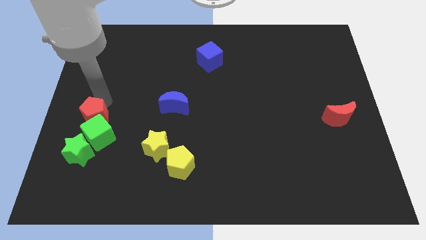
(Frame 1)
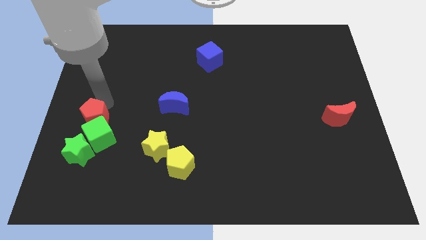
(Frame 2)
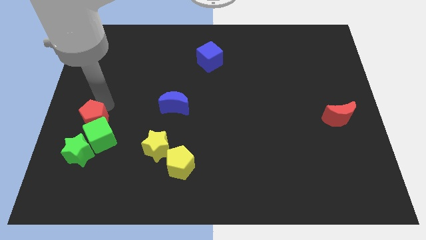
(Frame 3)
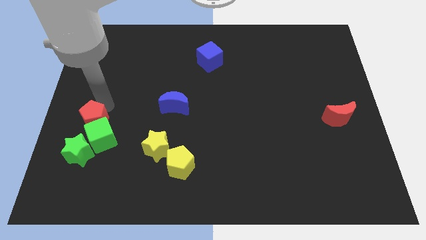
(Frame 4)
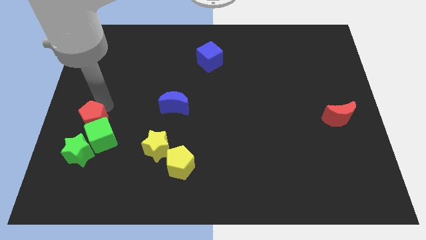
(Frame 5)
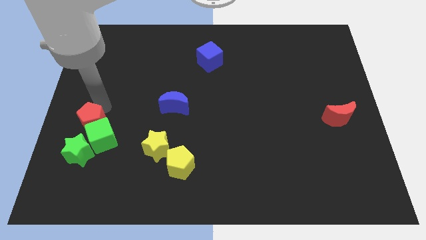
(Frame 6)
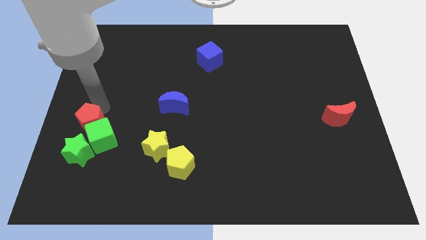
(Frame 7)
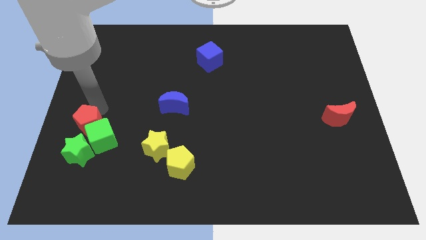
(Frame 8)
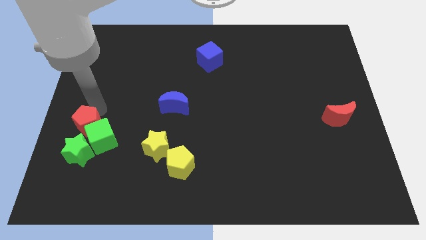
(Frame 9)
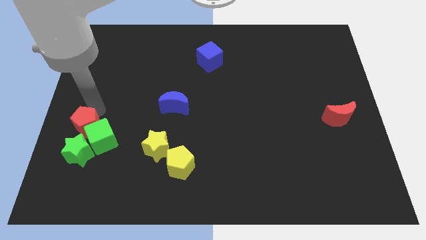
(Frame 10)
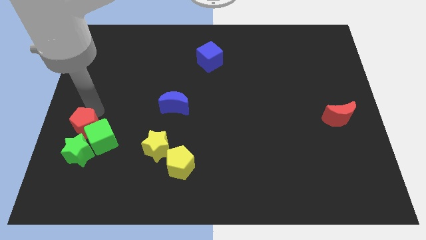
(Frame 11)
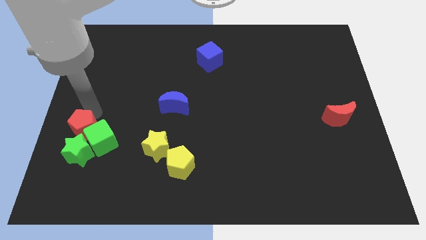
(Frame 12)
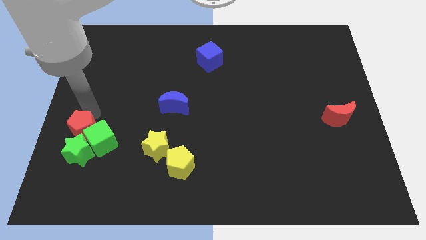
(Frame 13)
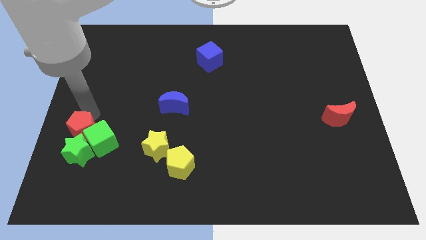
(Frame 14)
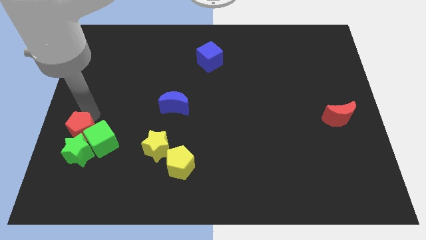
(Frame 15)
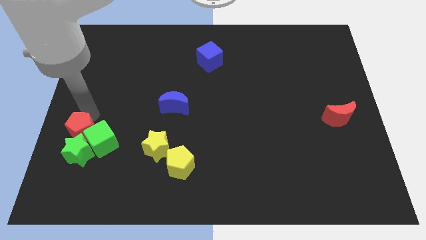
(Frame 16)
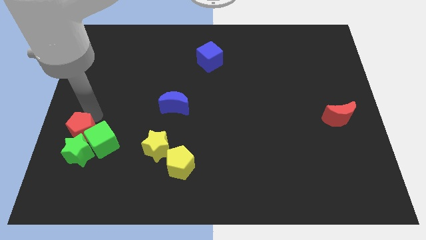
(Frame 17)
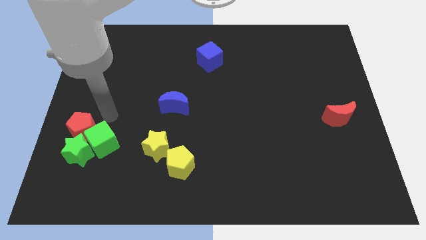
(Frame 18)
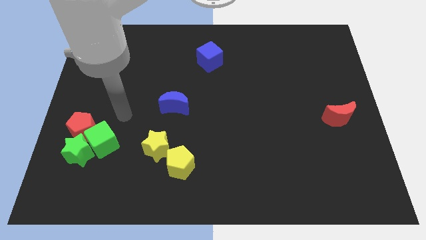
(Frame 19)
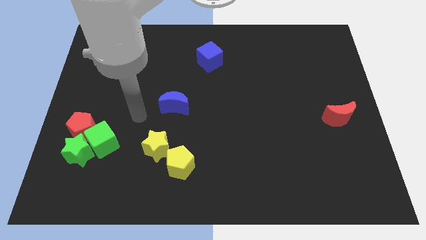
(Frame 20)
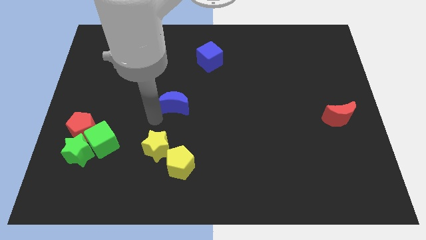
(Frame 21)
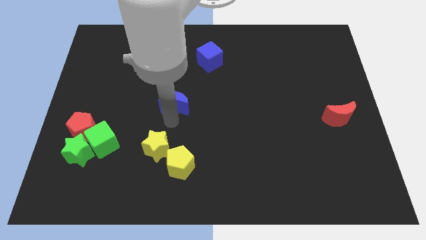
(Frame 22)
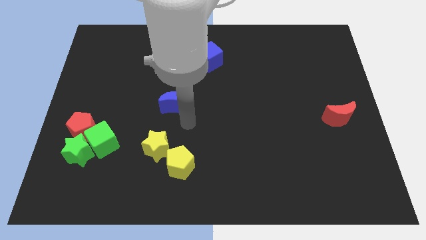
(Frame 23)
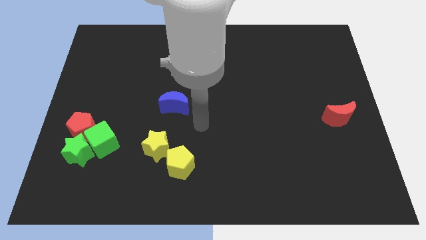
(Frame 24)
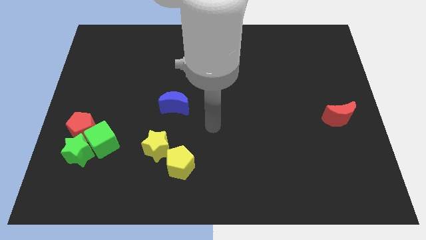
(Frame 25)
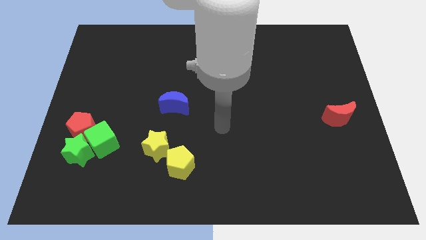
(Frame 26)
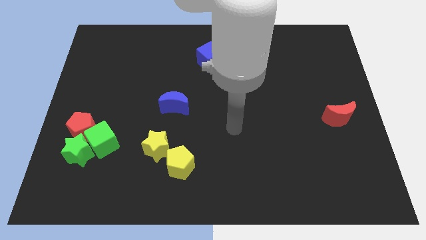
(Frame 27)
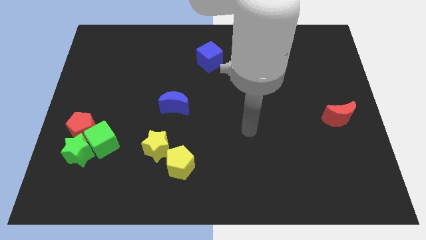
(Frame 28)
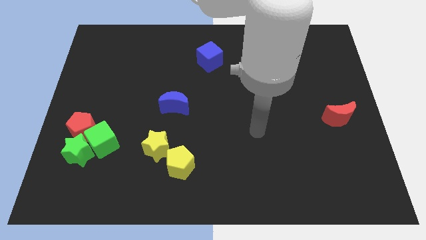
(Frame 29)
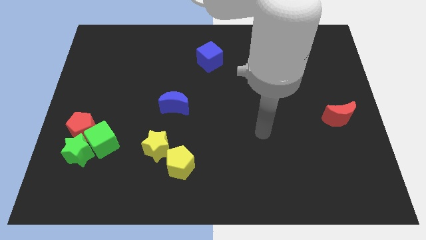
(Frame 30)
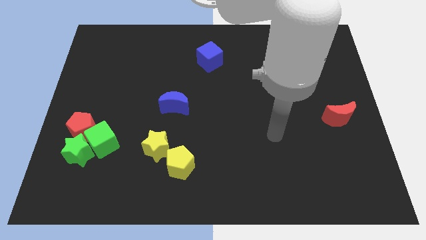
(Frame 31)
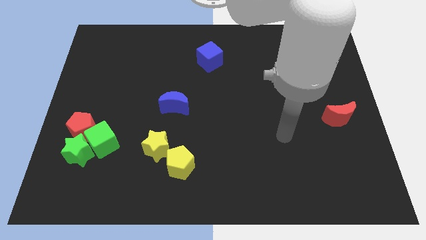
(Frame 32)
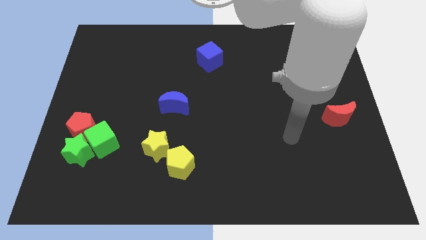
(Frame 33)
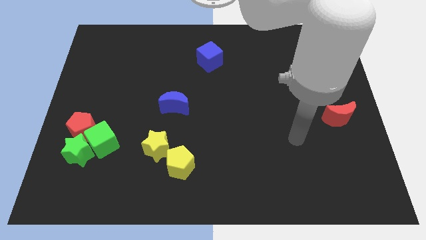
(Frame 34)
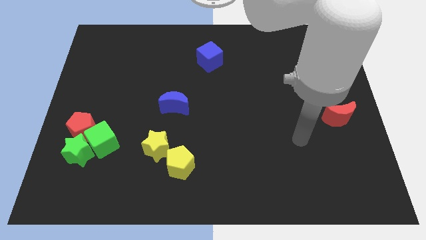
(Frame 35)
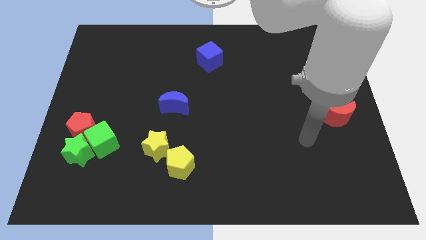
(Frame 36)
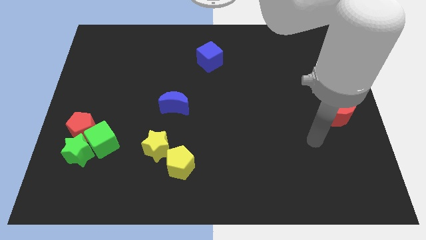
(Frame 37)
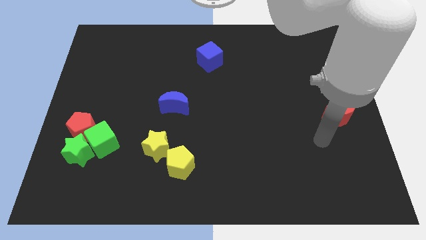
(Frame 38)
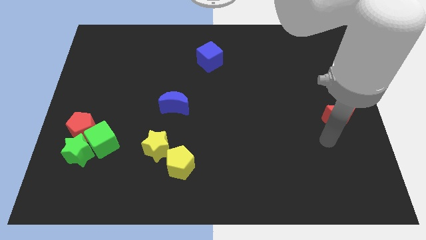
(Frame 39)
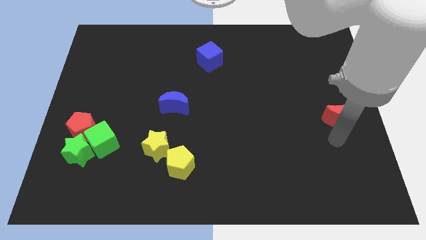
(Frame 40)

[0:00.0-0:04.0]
move your arm to the right center of the board

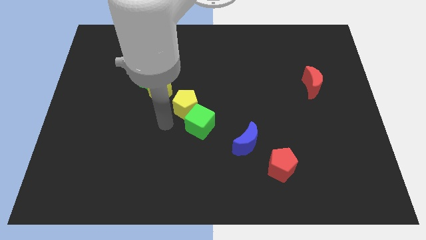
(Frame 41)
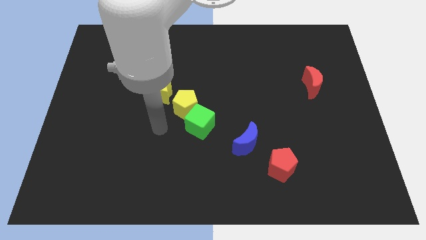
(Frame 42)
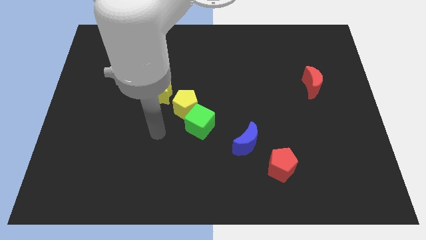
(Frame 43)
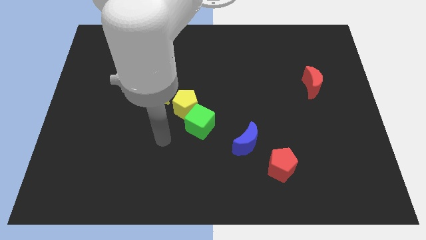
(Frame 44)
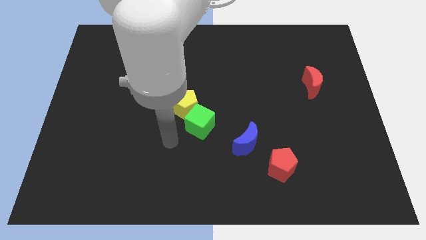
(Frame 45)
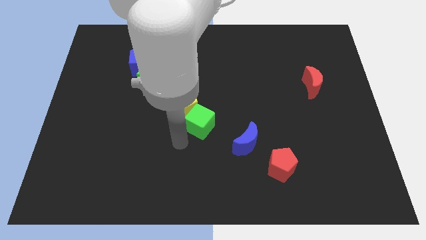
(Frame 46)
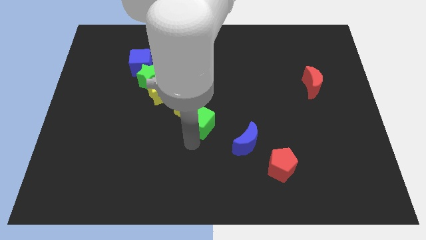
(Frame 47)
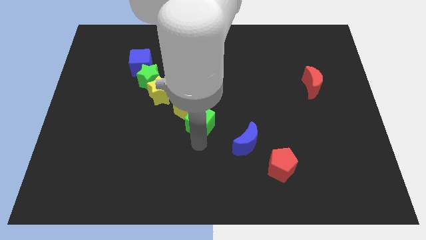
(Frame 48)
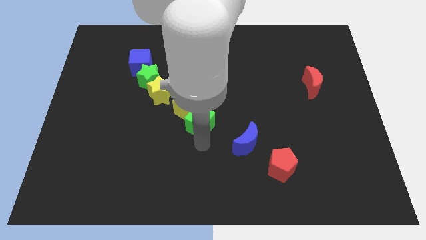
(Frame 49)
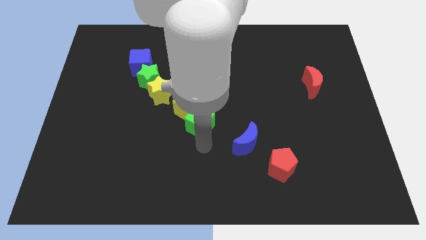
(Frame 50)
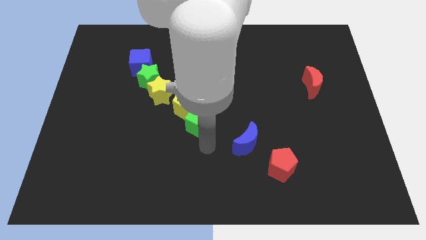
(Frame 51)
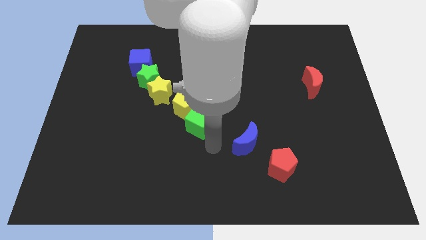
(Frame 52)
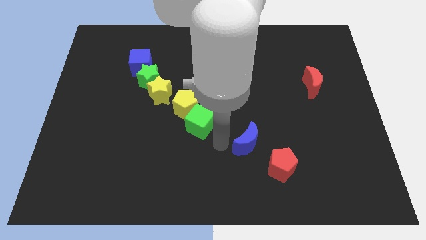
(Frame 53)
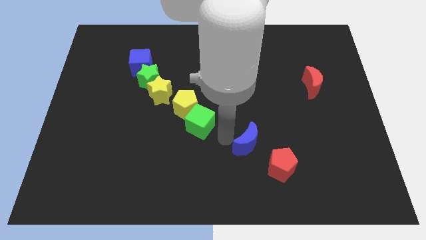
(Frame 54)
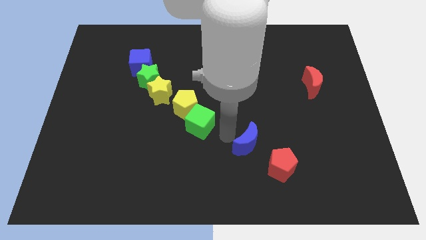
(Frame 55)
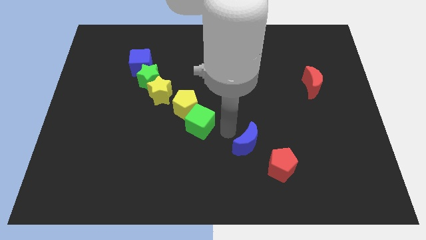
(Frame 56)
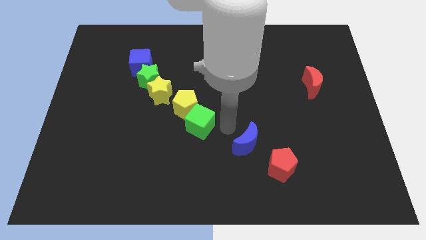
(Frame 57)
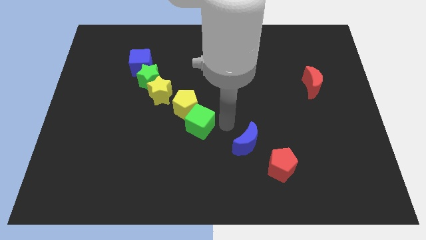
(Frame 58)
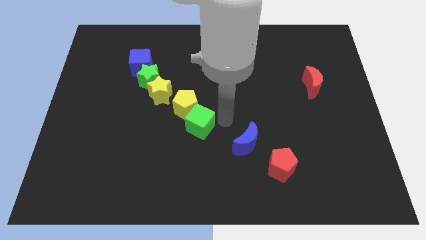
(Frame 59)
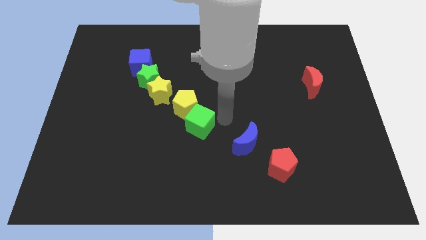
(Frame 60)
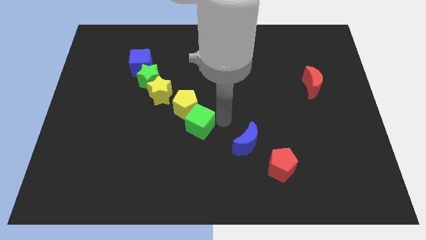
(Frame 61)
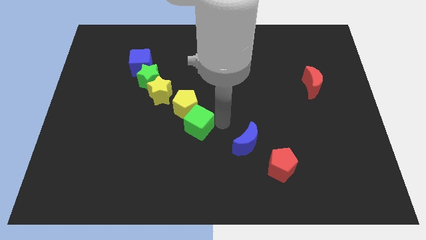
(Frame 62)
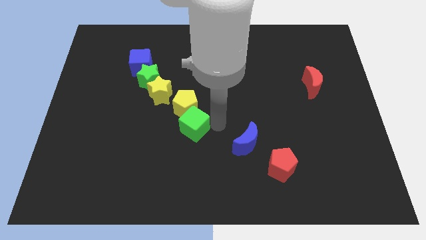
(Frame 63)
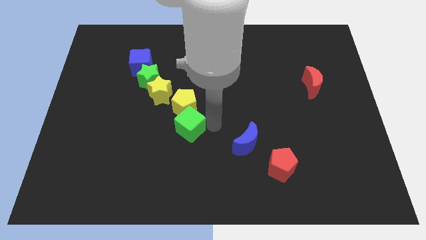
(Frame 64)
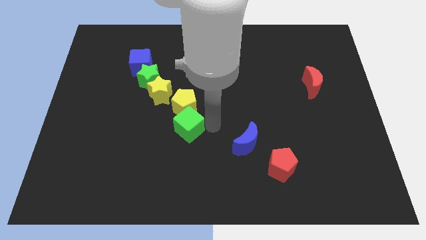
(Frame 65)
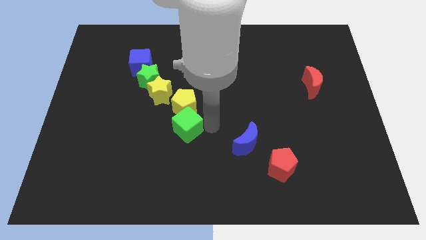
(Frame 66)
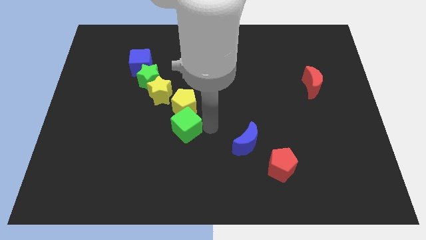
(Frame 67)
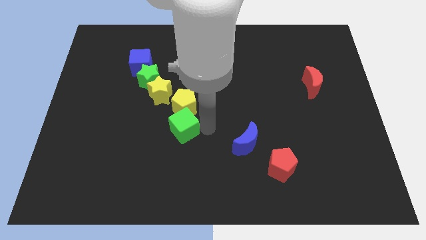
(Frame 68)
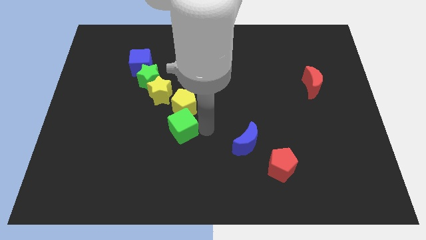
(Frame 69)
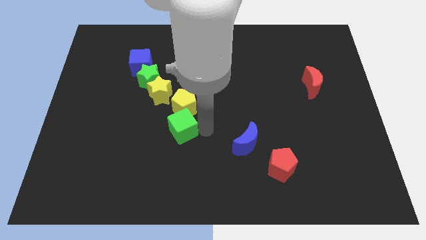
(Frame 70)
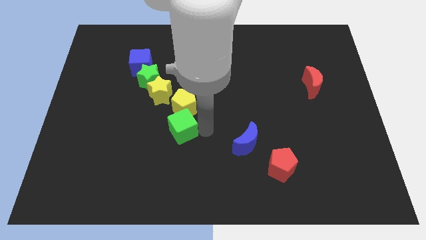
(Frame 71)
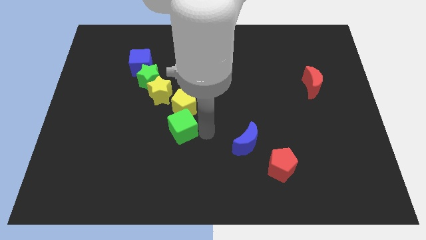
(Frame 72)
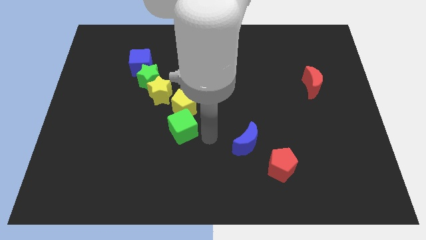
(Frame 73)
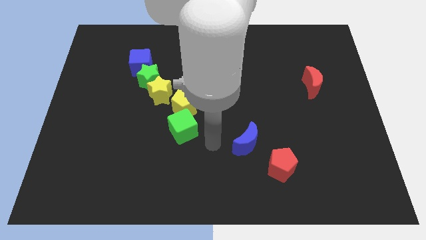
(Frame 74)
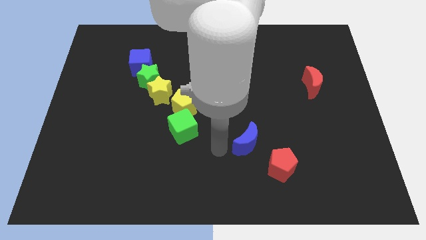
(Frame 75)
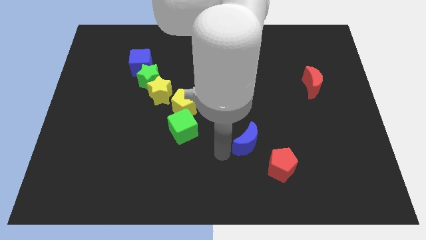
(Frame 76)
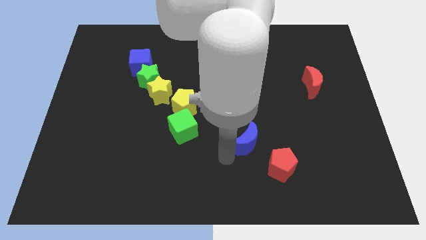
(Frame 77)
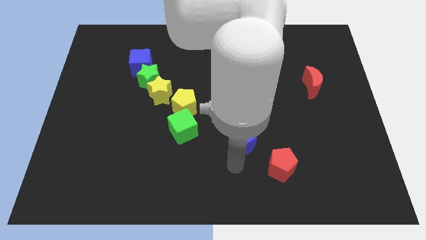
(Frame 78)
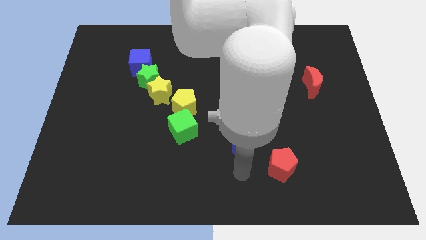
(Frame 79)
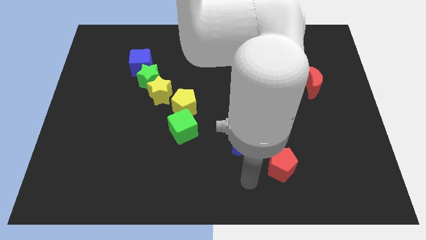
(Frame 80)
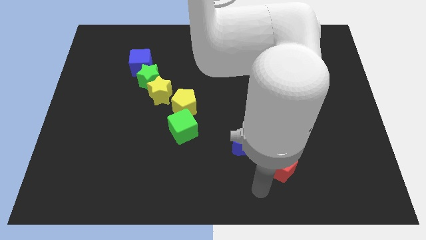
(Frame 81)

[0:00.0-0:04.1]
move the green cube to the left of the board

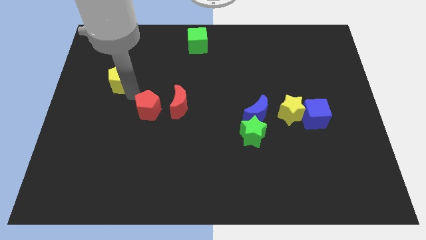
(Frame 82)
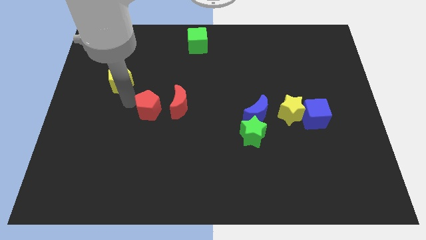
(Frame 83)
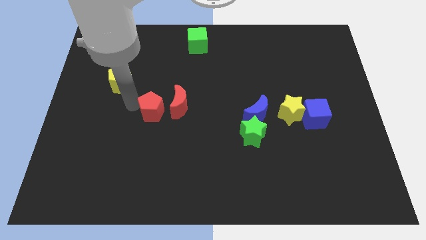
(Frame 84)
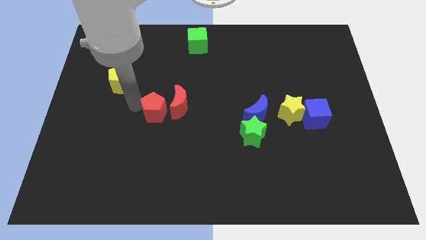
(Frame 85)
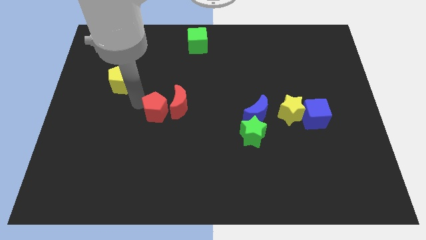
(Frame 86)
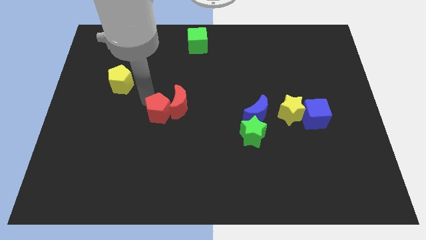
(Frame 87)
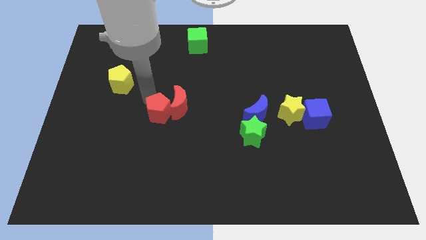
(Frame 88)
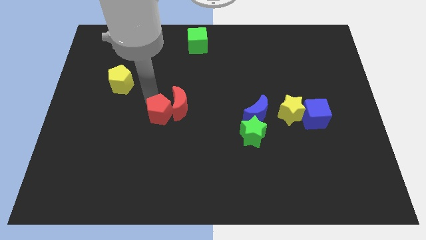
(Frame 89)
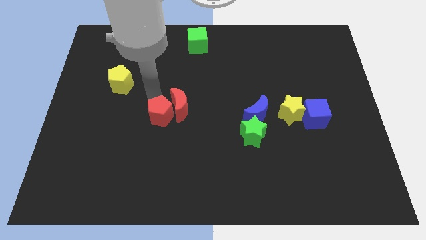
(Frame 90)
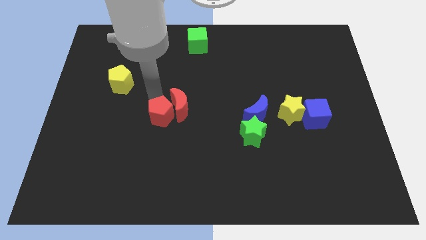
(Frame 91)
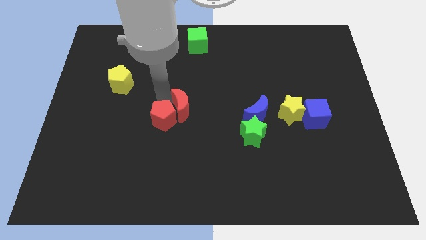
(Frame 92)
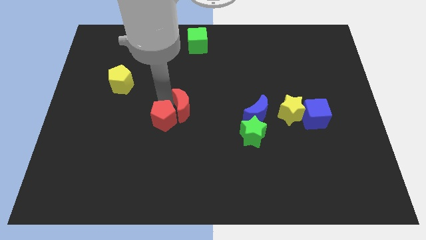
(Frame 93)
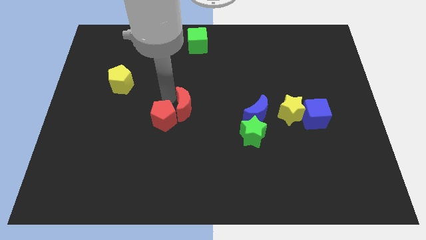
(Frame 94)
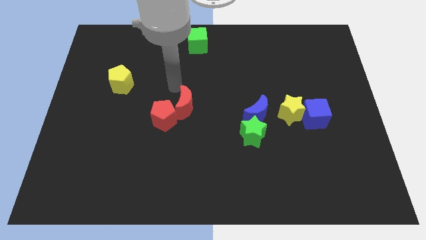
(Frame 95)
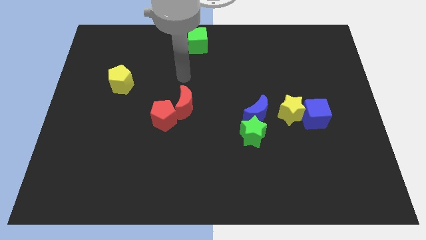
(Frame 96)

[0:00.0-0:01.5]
push the red pentagon into red crescent
